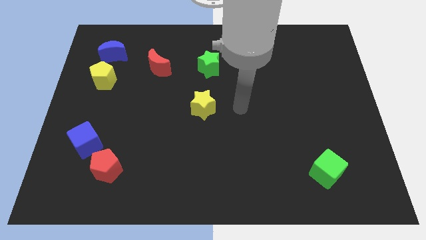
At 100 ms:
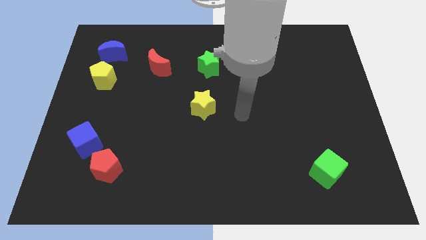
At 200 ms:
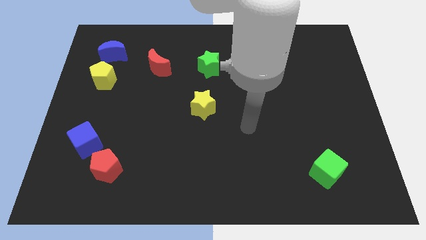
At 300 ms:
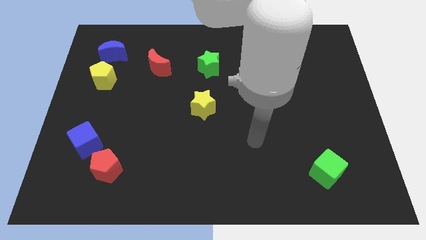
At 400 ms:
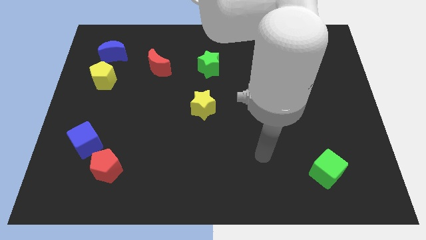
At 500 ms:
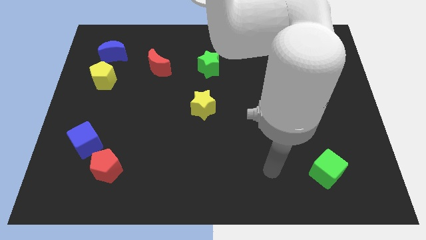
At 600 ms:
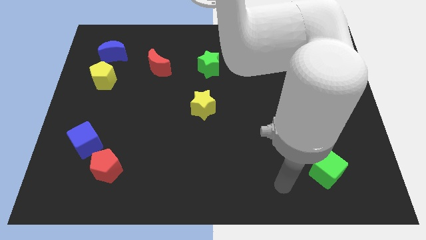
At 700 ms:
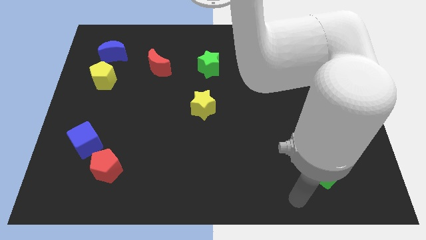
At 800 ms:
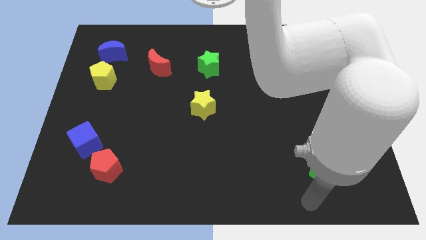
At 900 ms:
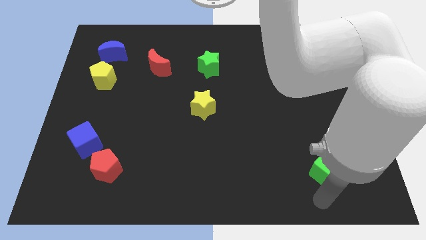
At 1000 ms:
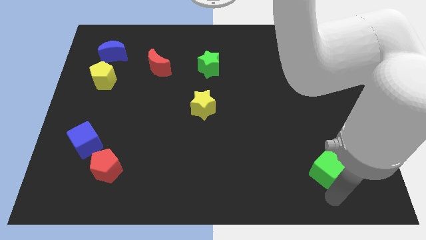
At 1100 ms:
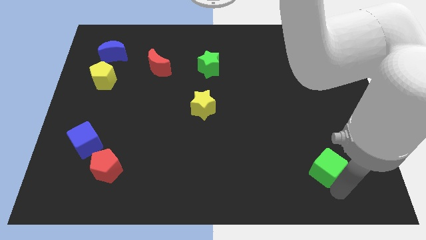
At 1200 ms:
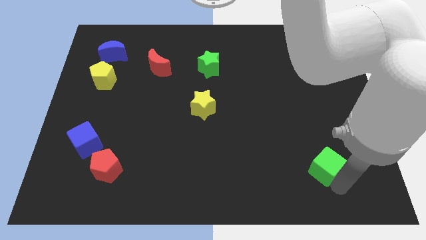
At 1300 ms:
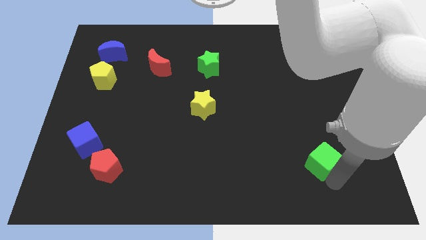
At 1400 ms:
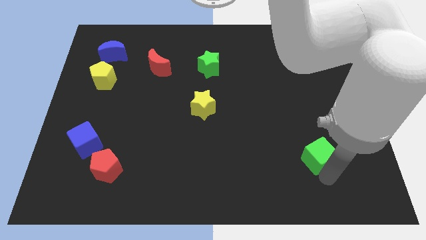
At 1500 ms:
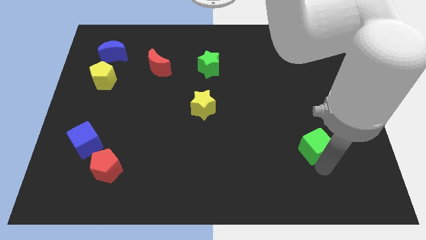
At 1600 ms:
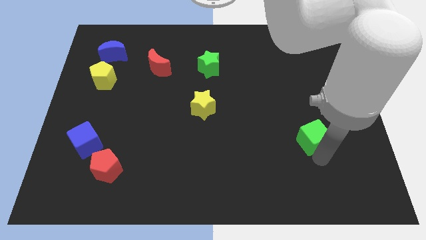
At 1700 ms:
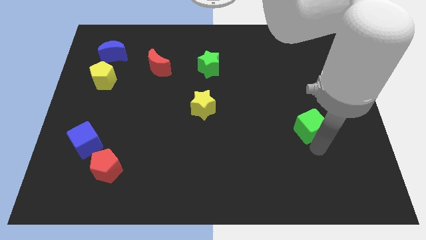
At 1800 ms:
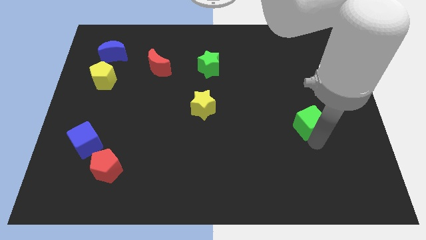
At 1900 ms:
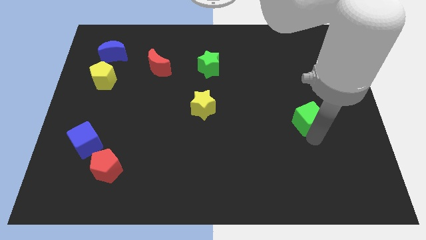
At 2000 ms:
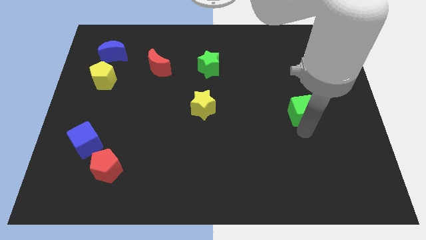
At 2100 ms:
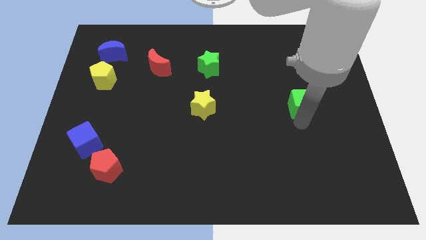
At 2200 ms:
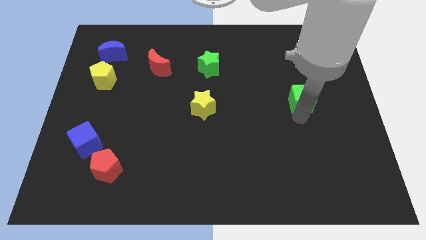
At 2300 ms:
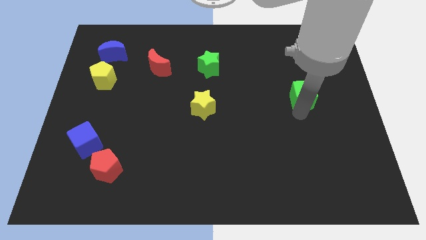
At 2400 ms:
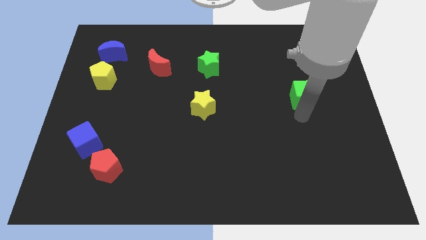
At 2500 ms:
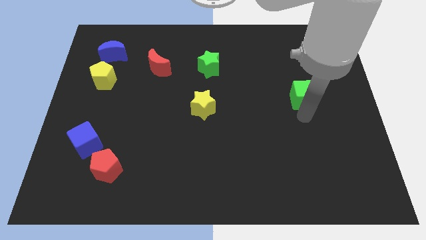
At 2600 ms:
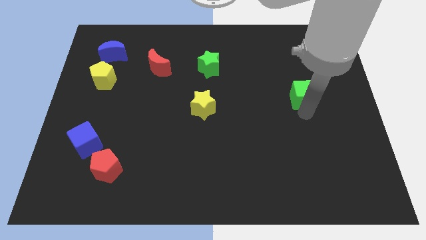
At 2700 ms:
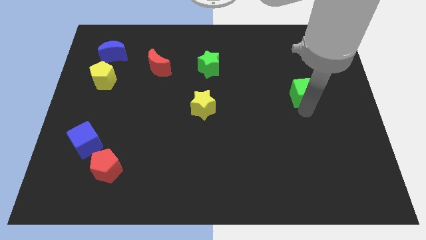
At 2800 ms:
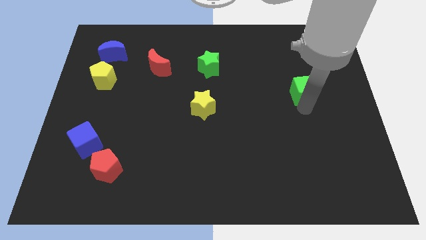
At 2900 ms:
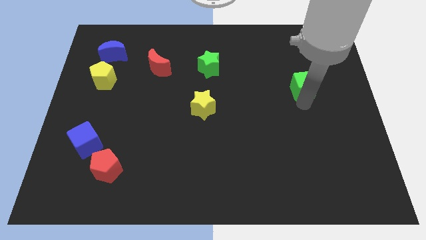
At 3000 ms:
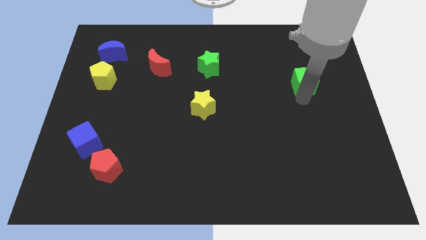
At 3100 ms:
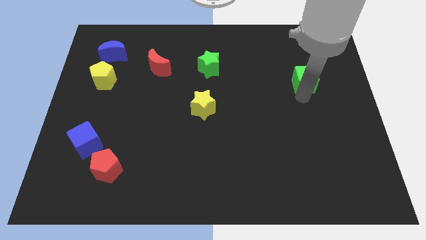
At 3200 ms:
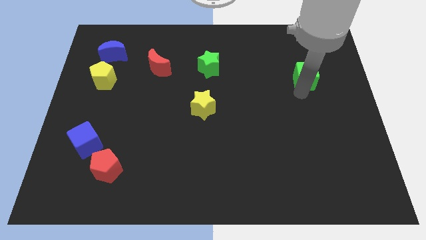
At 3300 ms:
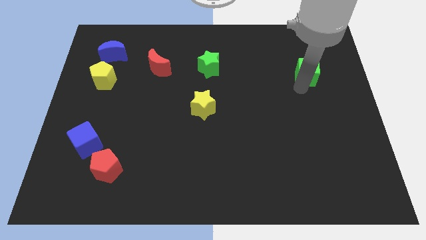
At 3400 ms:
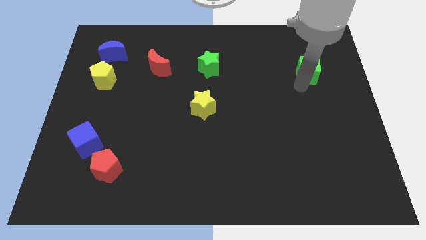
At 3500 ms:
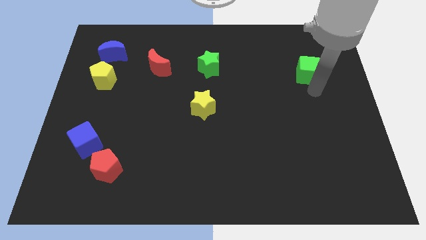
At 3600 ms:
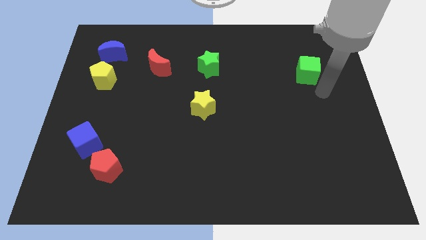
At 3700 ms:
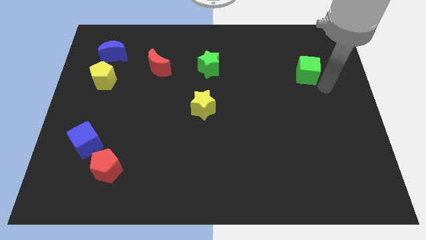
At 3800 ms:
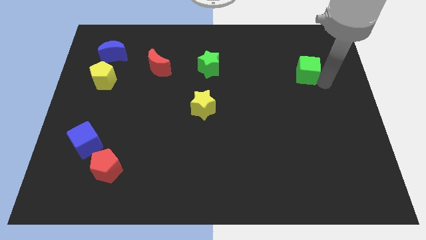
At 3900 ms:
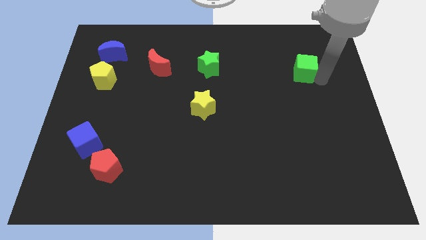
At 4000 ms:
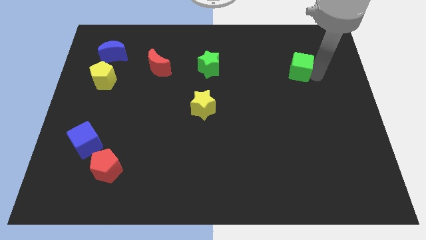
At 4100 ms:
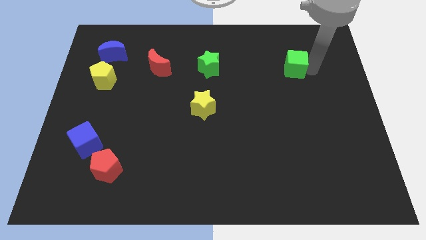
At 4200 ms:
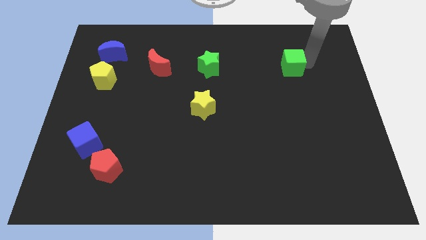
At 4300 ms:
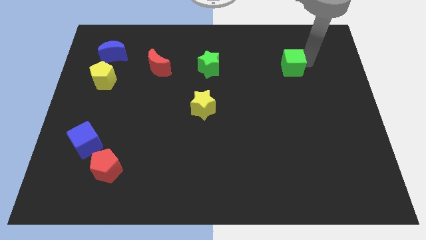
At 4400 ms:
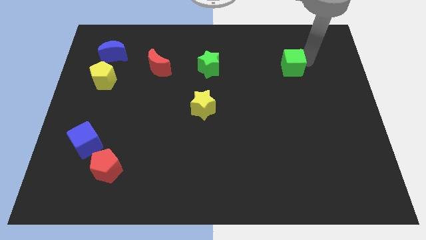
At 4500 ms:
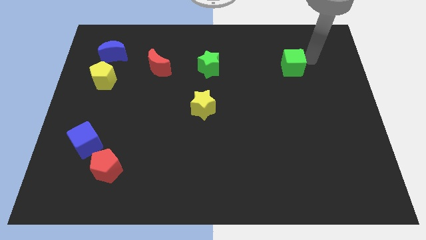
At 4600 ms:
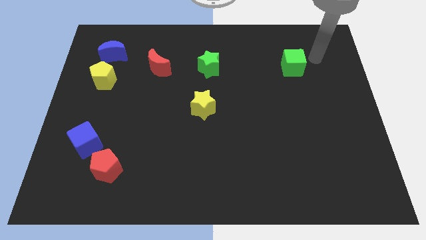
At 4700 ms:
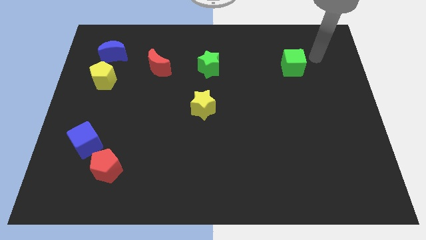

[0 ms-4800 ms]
move the green cube towards top side of the board

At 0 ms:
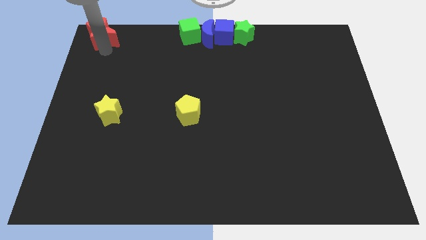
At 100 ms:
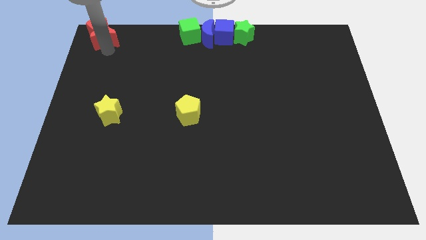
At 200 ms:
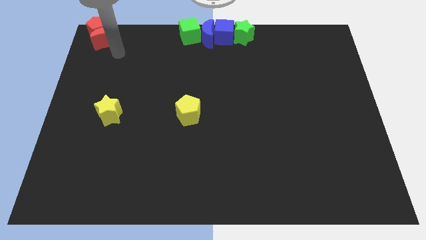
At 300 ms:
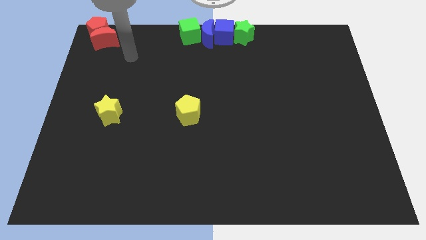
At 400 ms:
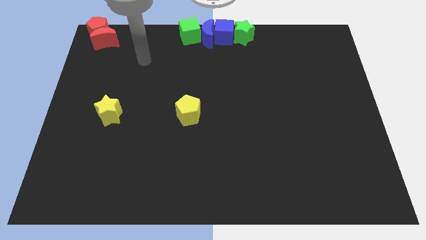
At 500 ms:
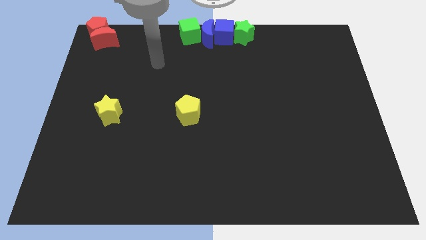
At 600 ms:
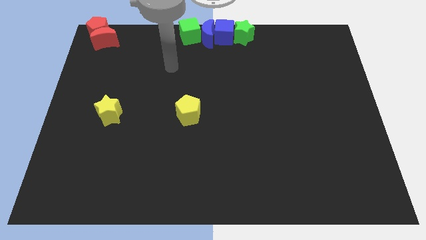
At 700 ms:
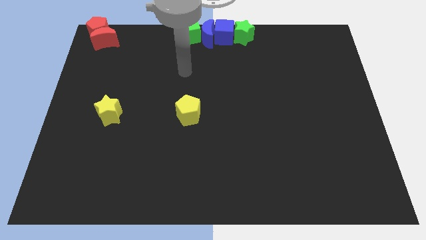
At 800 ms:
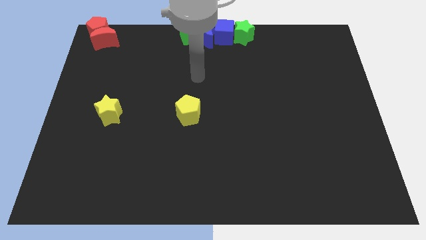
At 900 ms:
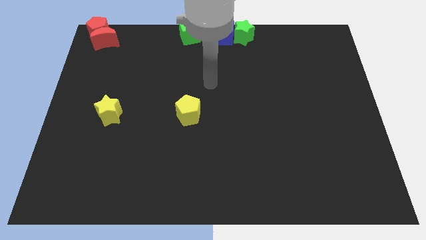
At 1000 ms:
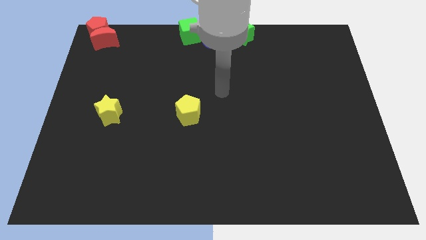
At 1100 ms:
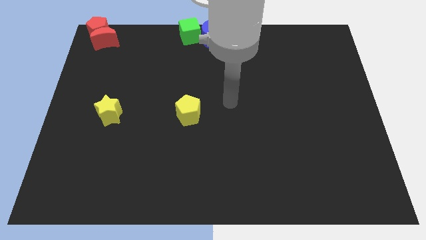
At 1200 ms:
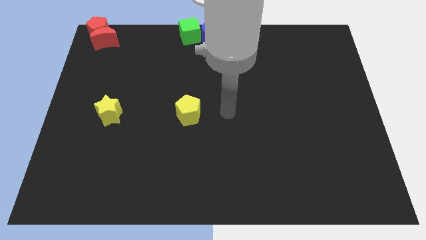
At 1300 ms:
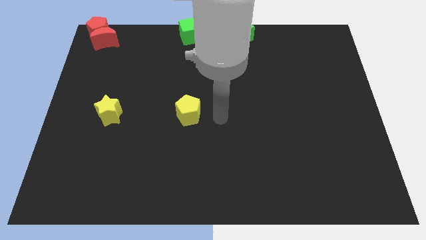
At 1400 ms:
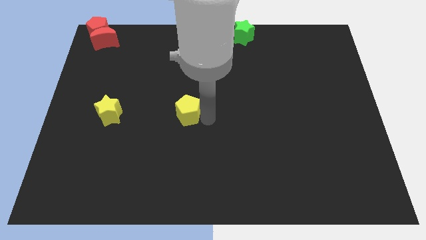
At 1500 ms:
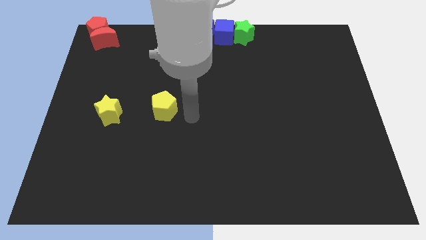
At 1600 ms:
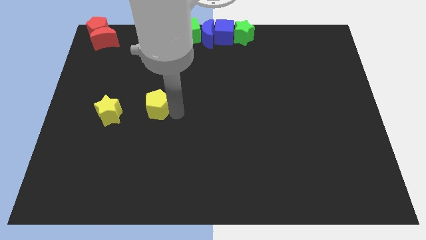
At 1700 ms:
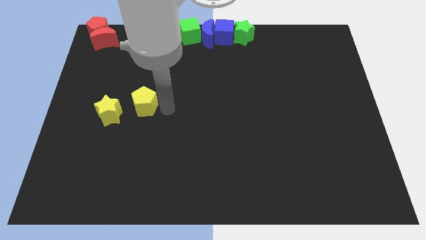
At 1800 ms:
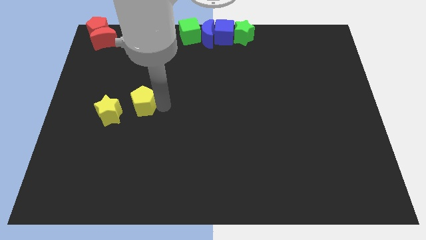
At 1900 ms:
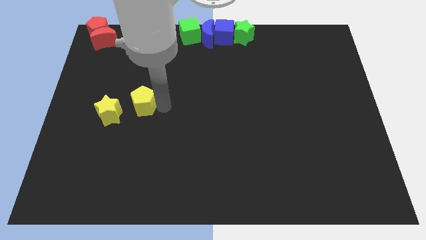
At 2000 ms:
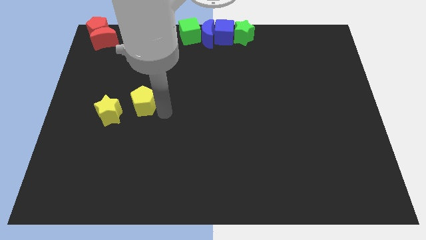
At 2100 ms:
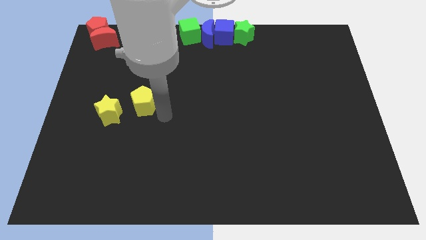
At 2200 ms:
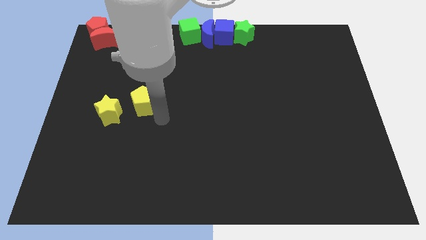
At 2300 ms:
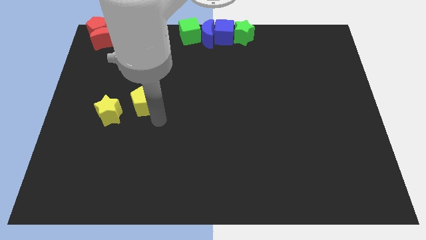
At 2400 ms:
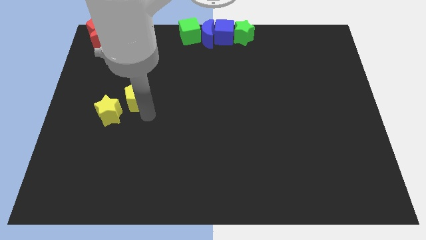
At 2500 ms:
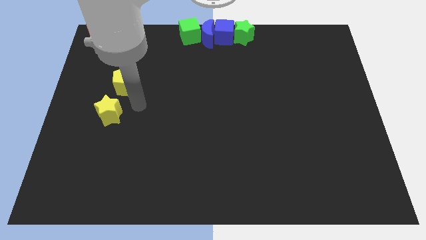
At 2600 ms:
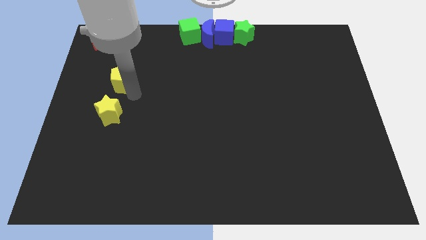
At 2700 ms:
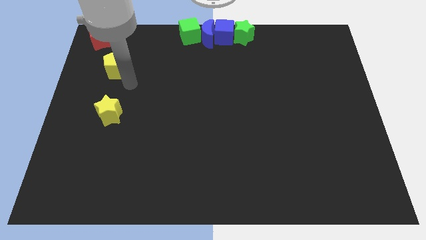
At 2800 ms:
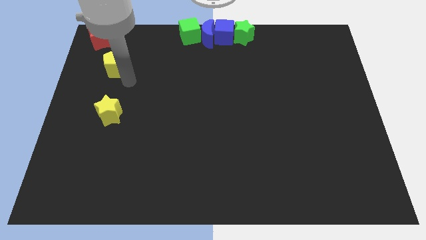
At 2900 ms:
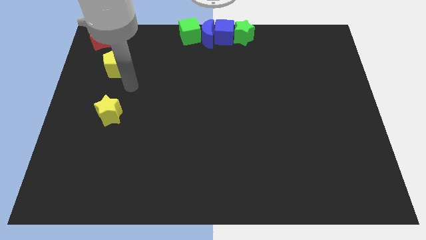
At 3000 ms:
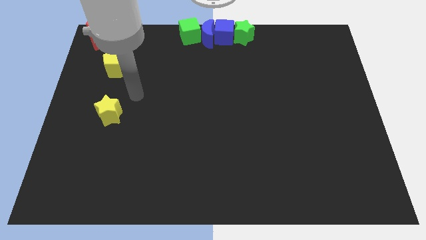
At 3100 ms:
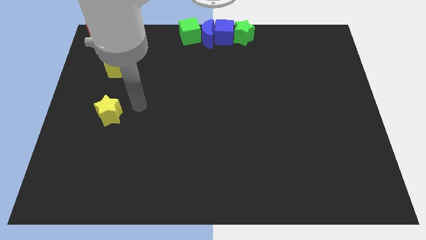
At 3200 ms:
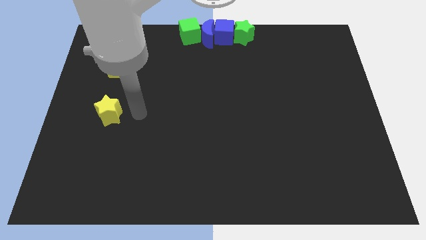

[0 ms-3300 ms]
move the yellow pentagon above the yellow star

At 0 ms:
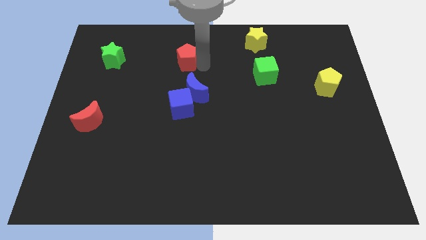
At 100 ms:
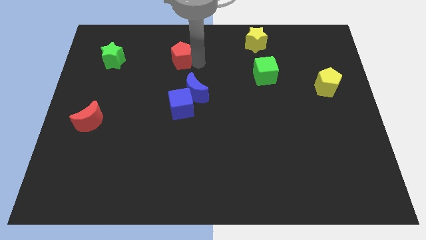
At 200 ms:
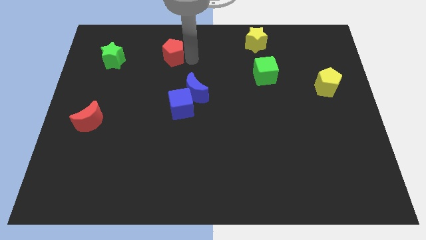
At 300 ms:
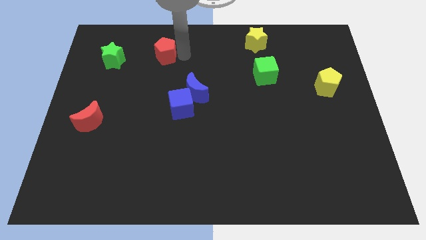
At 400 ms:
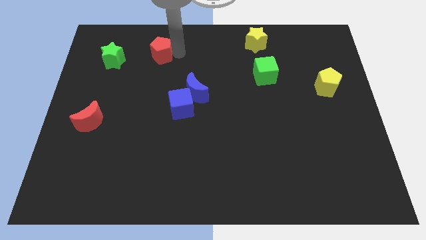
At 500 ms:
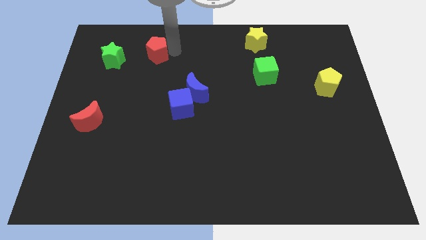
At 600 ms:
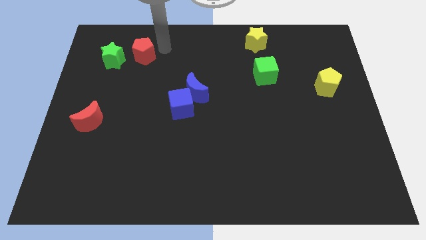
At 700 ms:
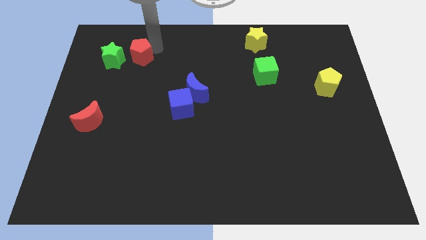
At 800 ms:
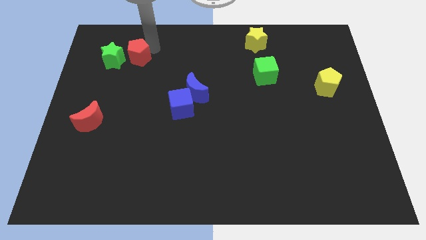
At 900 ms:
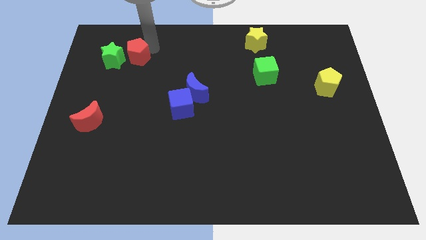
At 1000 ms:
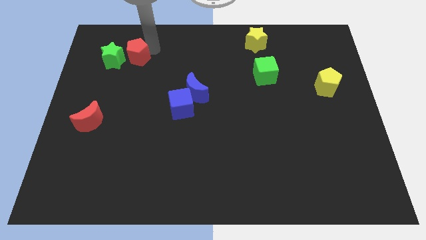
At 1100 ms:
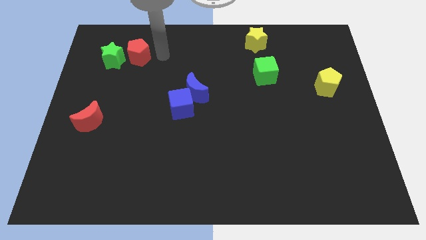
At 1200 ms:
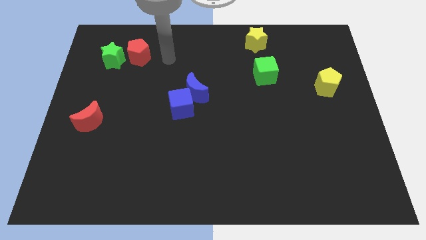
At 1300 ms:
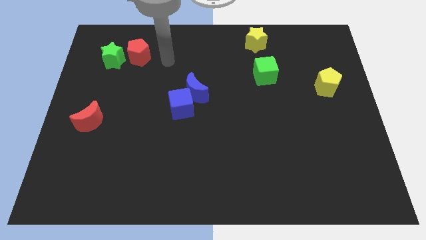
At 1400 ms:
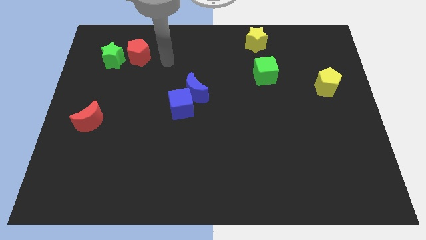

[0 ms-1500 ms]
move red pentagon right beside the green star
